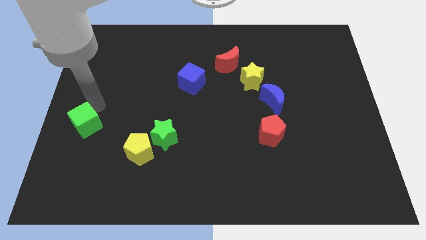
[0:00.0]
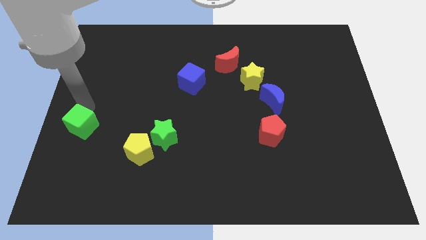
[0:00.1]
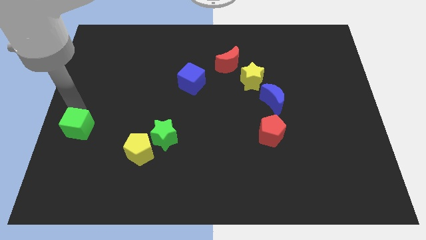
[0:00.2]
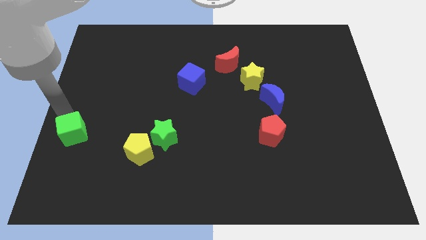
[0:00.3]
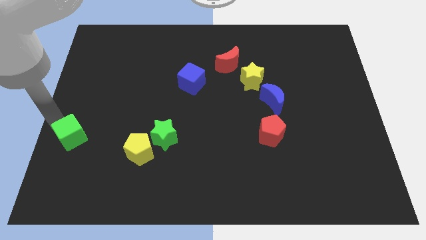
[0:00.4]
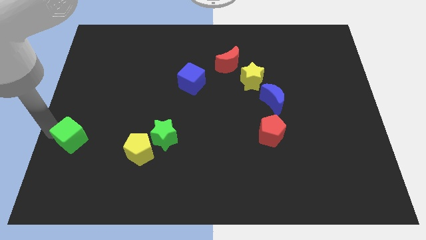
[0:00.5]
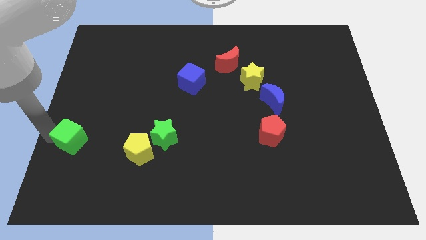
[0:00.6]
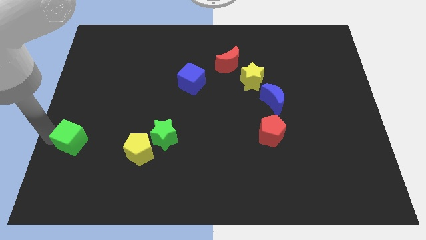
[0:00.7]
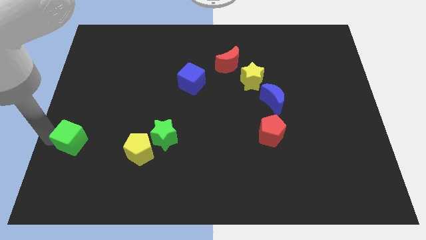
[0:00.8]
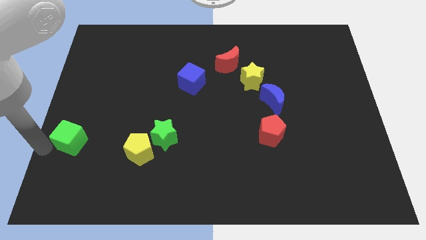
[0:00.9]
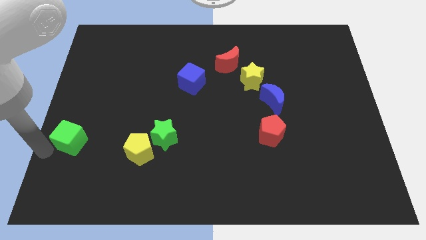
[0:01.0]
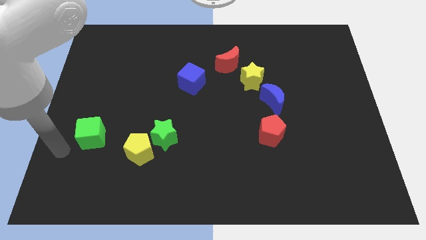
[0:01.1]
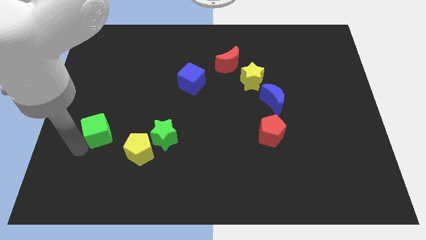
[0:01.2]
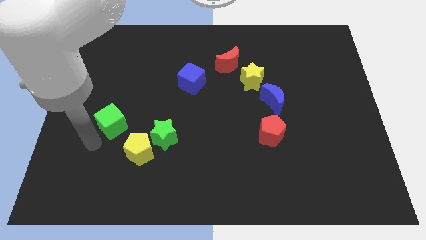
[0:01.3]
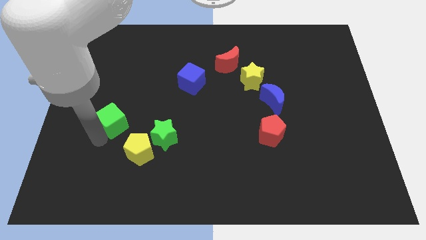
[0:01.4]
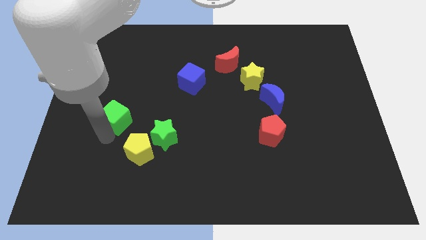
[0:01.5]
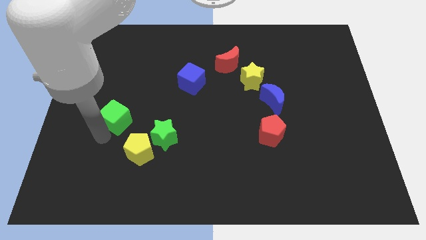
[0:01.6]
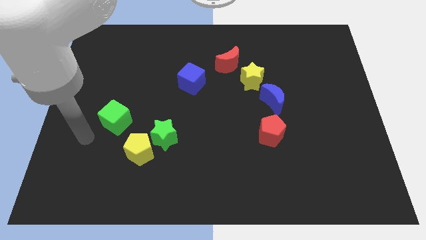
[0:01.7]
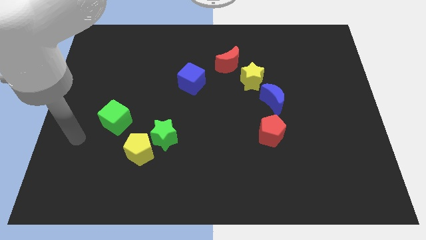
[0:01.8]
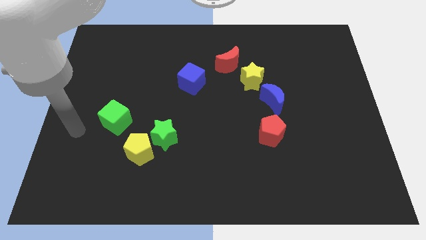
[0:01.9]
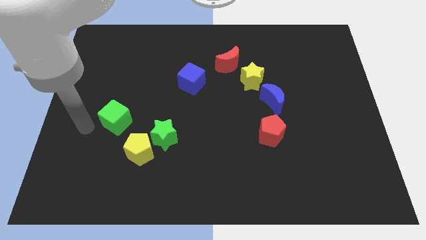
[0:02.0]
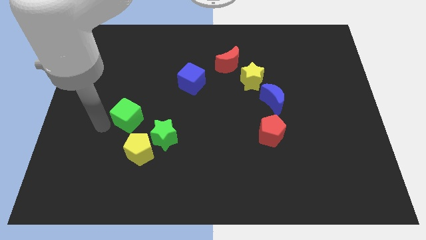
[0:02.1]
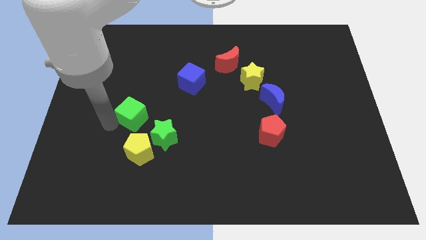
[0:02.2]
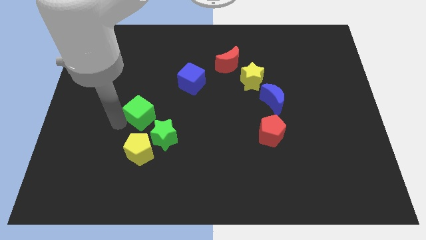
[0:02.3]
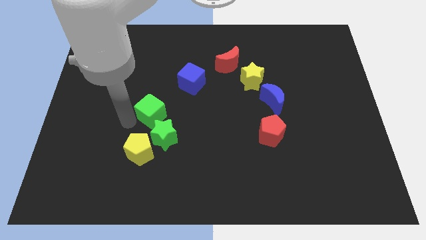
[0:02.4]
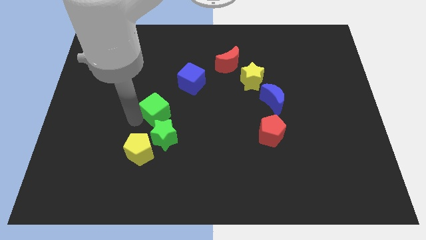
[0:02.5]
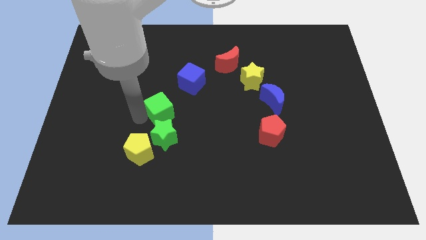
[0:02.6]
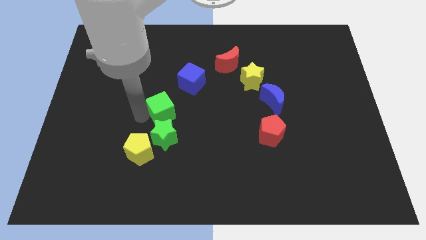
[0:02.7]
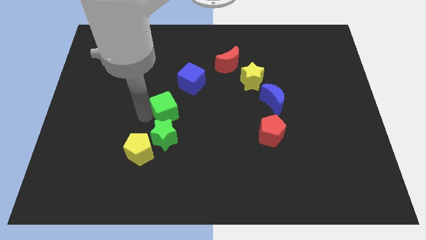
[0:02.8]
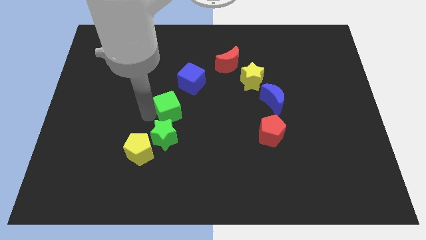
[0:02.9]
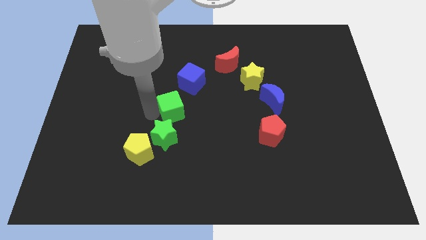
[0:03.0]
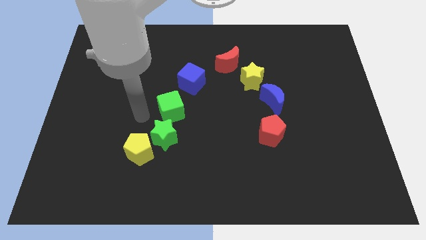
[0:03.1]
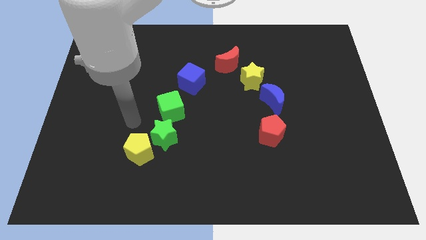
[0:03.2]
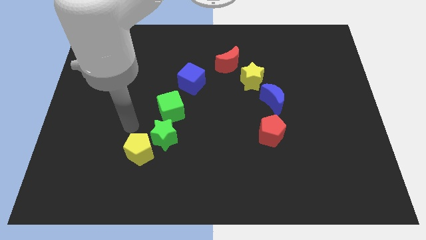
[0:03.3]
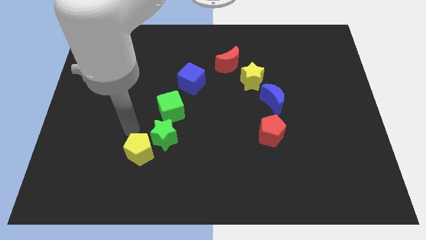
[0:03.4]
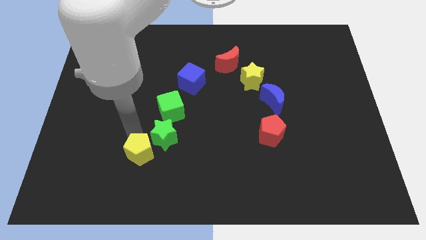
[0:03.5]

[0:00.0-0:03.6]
place green cube in between green star and blue cube

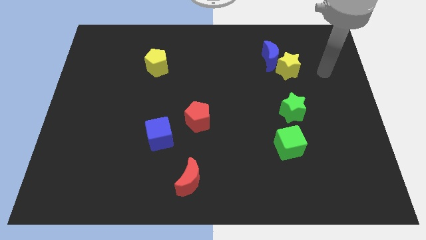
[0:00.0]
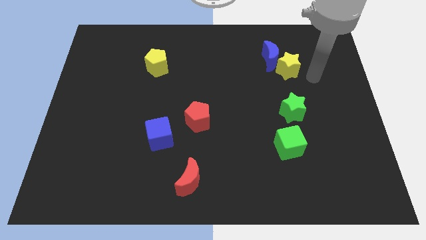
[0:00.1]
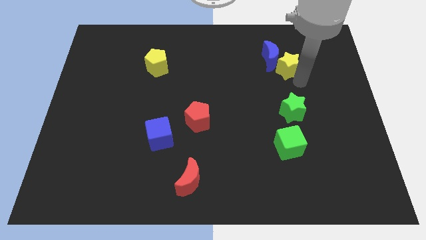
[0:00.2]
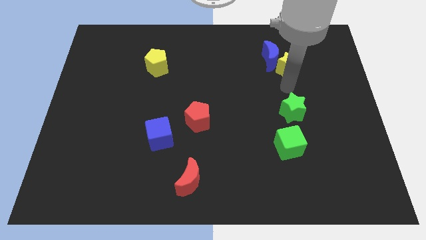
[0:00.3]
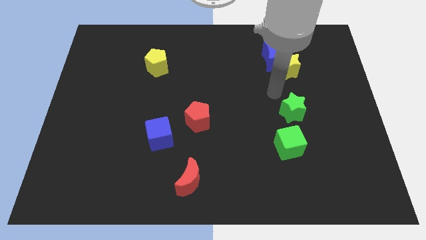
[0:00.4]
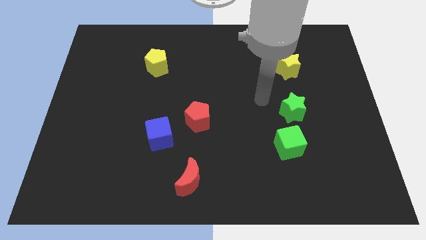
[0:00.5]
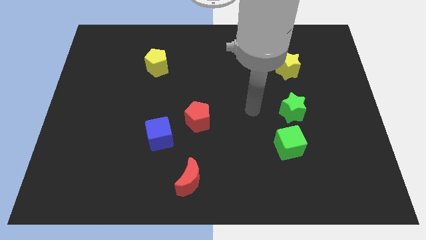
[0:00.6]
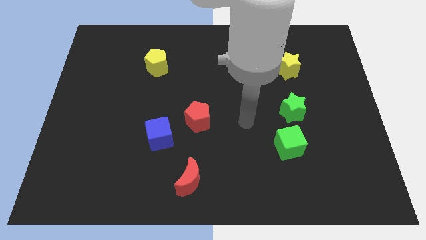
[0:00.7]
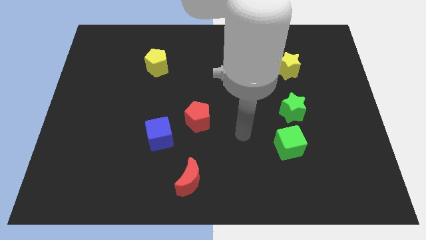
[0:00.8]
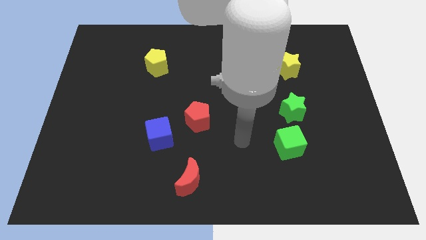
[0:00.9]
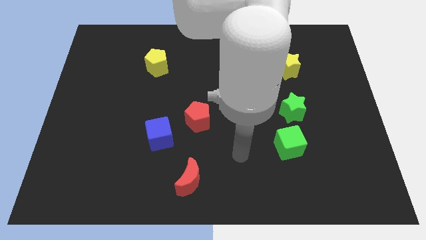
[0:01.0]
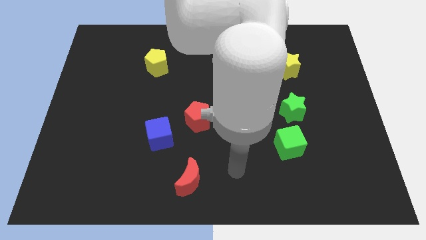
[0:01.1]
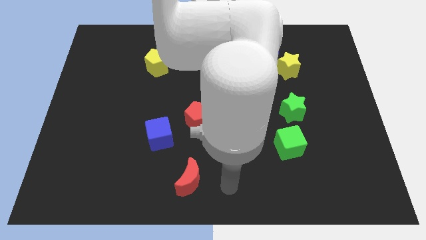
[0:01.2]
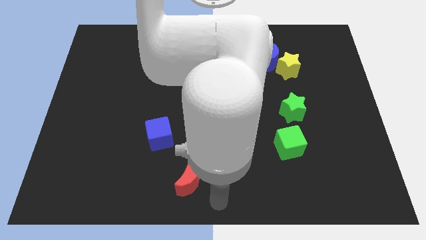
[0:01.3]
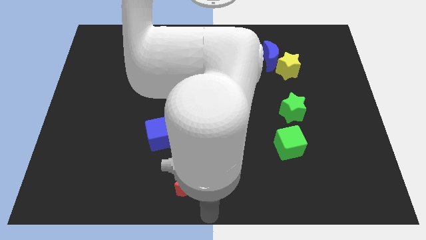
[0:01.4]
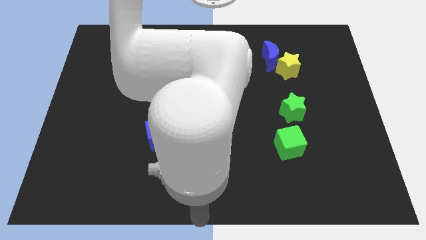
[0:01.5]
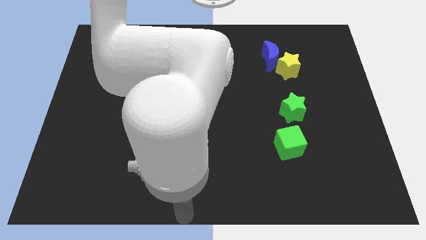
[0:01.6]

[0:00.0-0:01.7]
place your arm to the bottom of the red moon

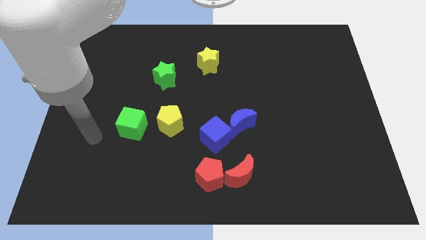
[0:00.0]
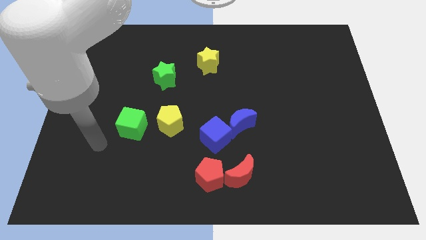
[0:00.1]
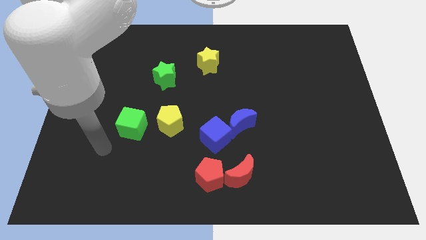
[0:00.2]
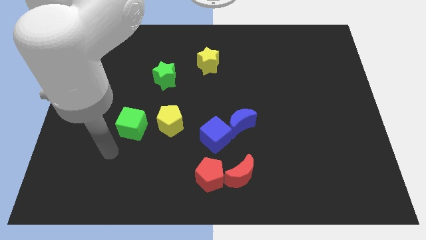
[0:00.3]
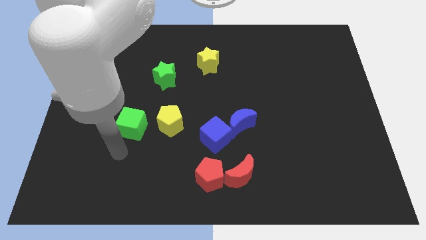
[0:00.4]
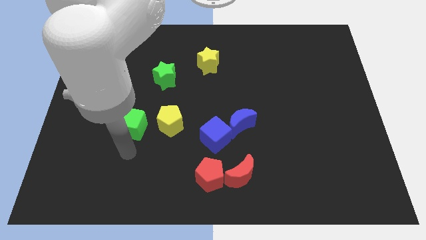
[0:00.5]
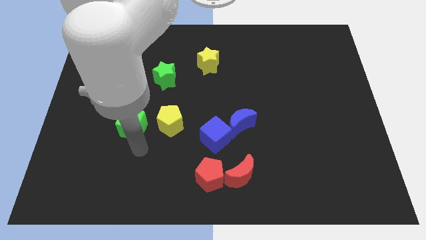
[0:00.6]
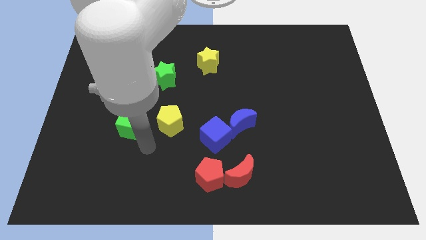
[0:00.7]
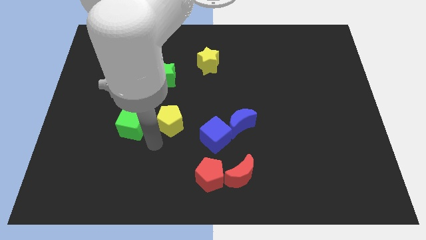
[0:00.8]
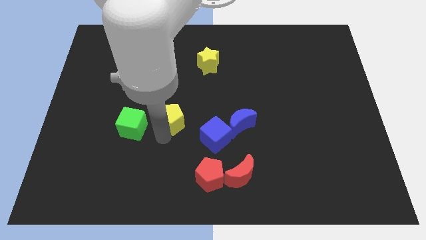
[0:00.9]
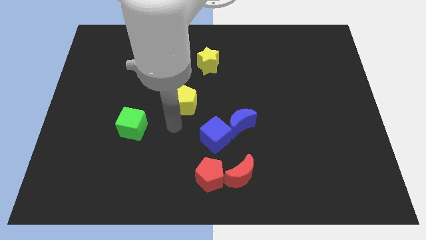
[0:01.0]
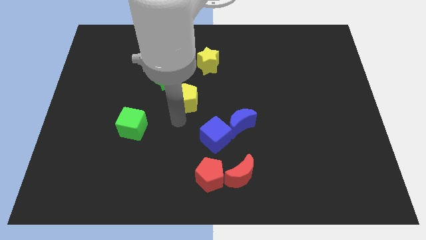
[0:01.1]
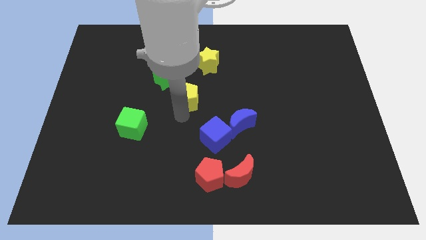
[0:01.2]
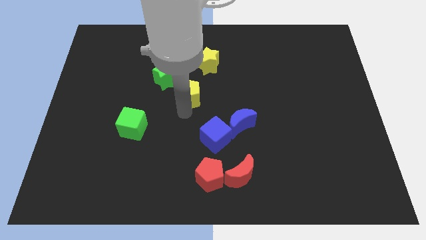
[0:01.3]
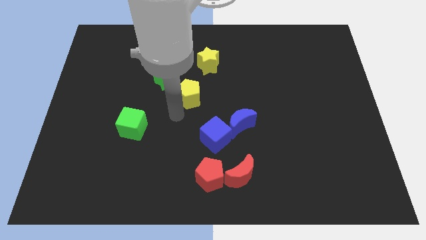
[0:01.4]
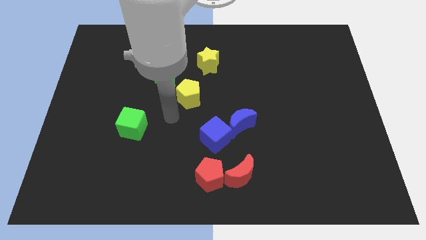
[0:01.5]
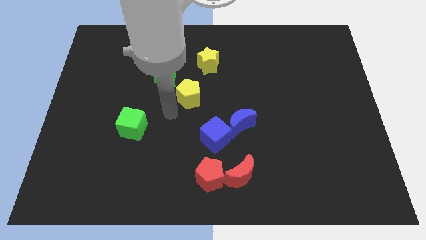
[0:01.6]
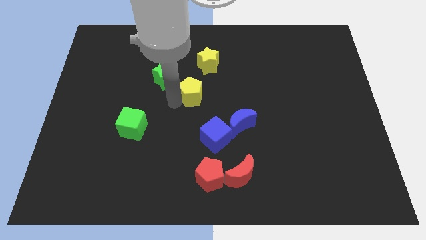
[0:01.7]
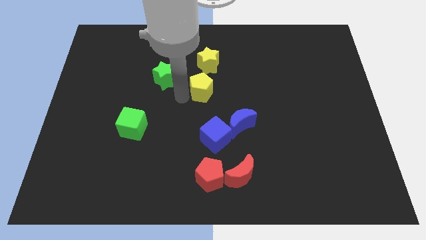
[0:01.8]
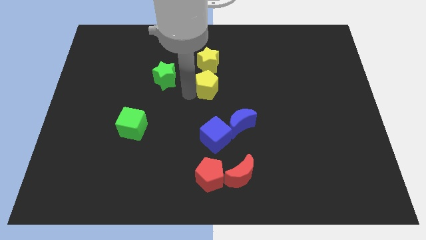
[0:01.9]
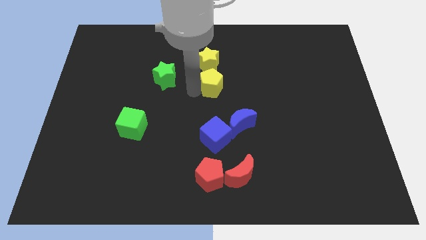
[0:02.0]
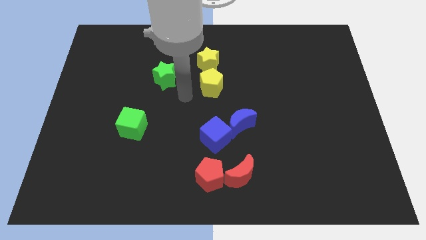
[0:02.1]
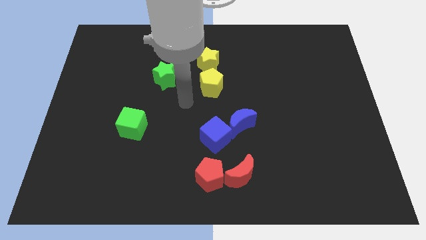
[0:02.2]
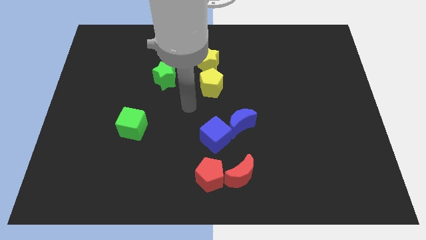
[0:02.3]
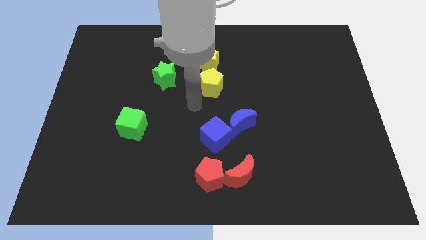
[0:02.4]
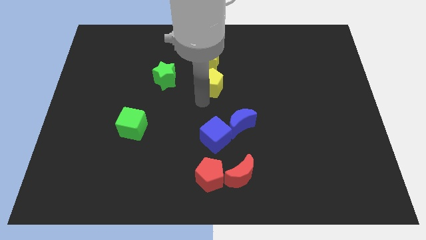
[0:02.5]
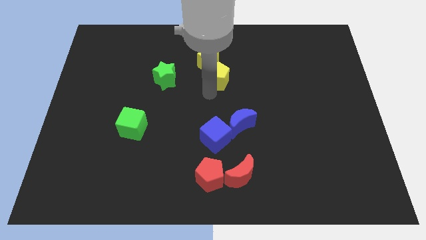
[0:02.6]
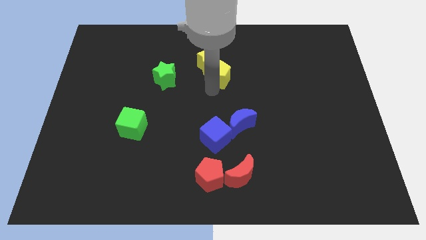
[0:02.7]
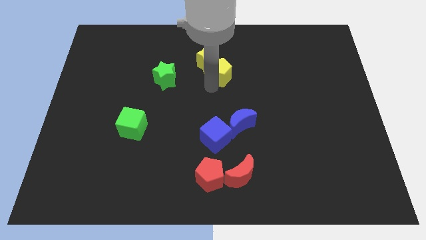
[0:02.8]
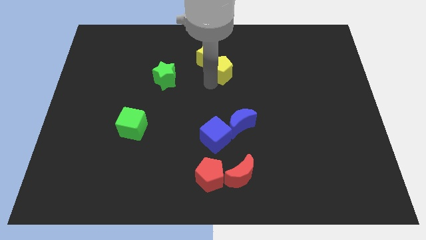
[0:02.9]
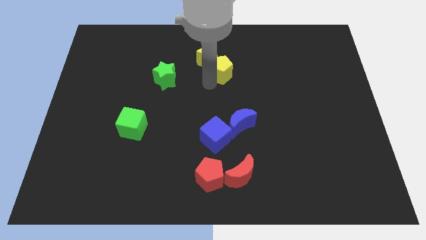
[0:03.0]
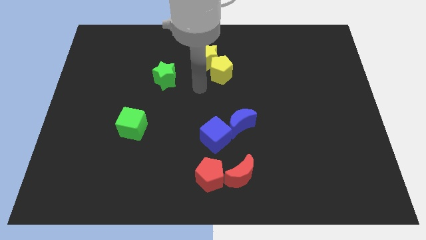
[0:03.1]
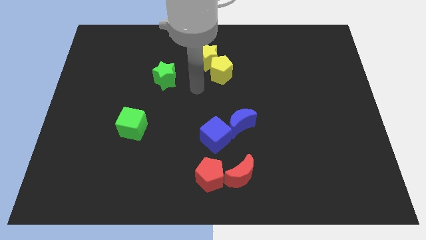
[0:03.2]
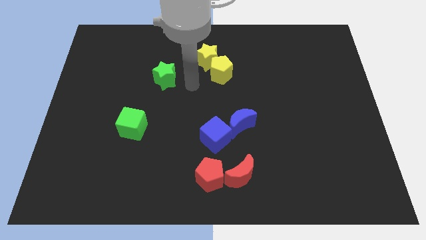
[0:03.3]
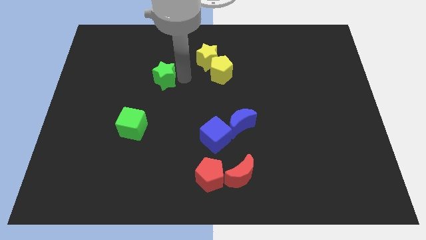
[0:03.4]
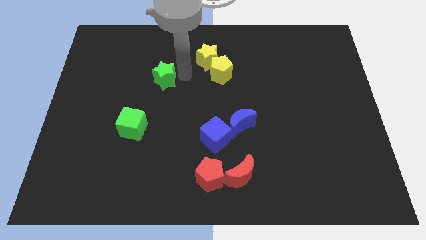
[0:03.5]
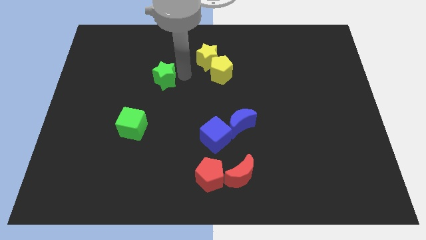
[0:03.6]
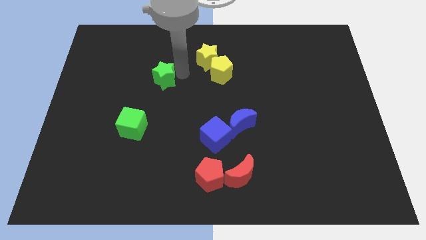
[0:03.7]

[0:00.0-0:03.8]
push the yellow star into the yellow pentagon
